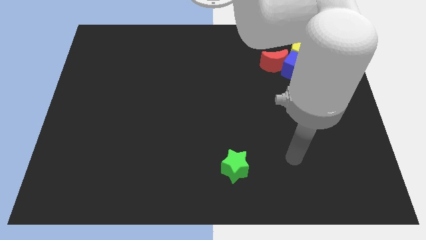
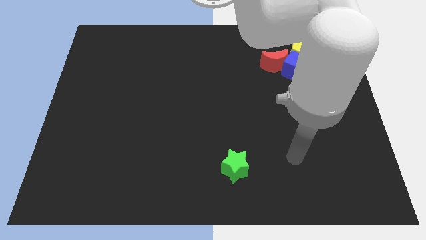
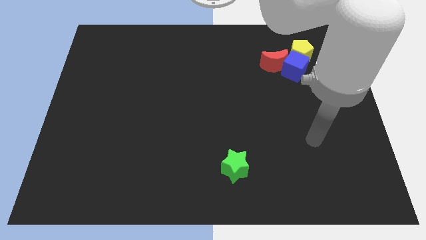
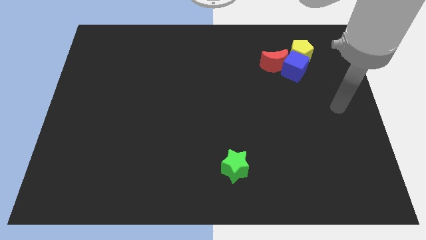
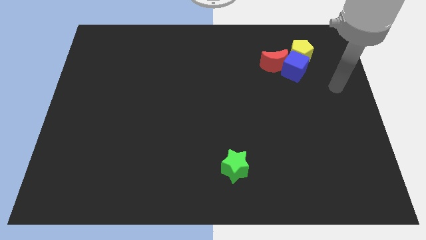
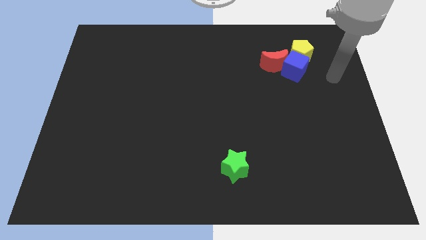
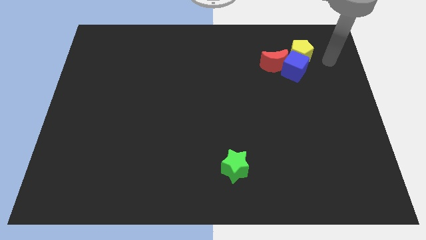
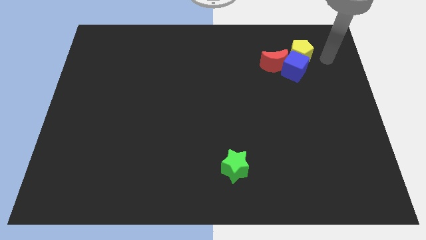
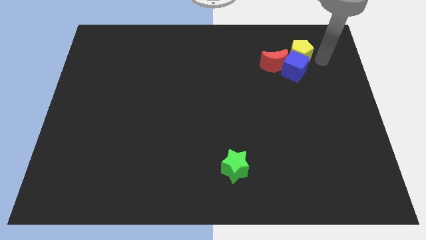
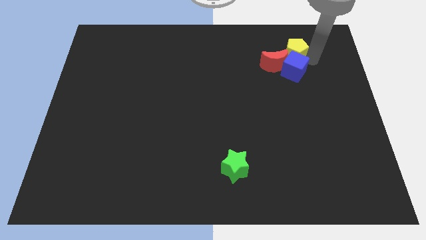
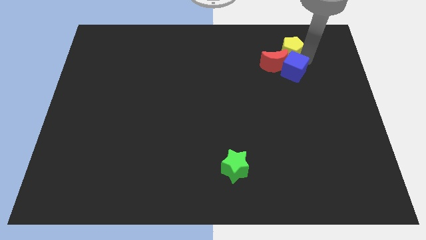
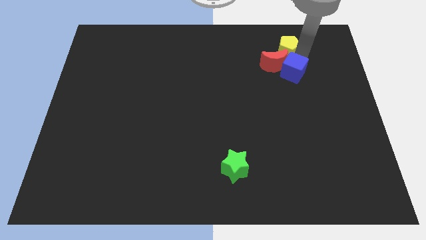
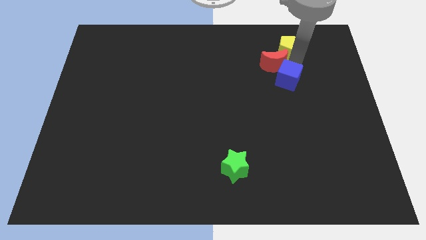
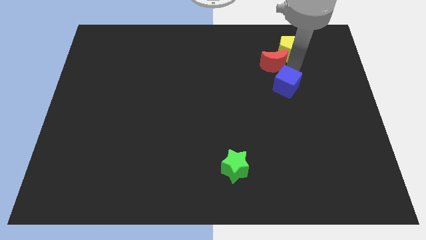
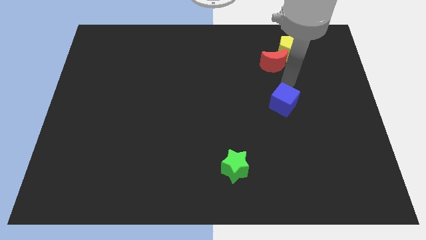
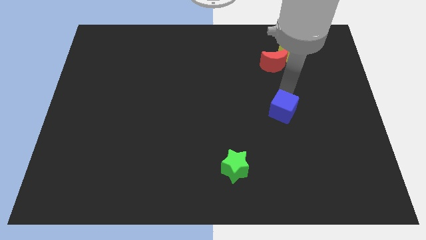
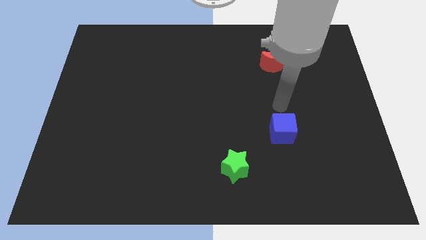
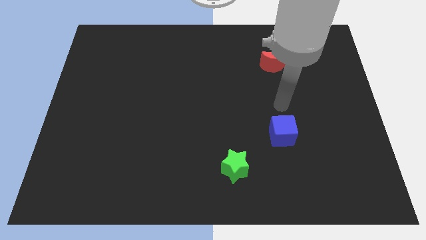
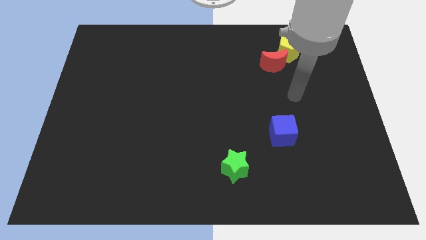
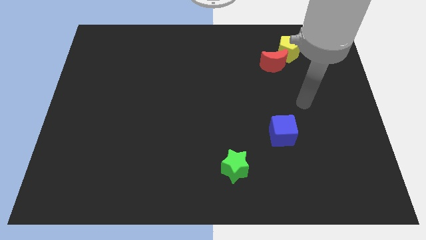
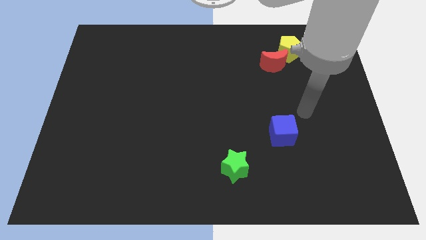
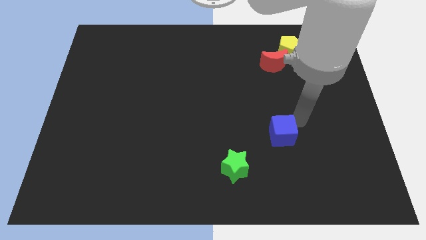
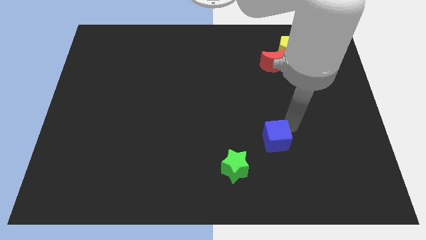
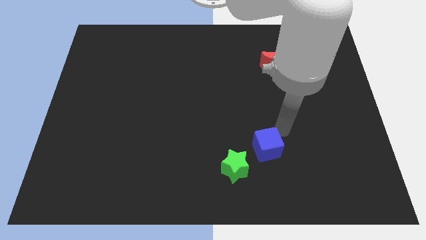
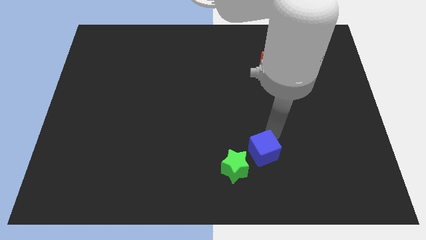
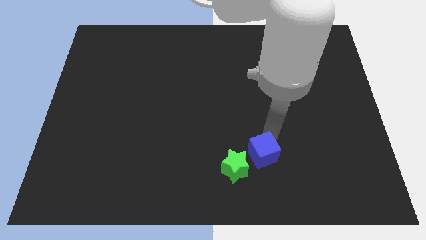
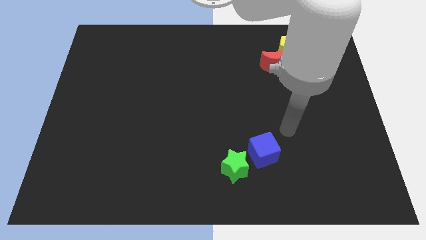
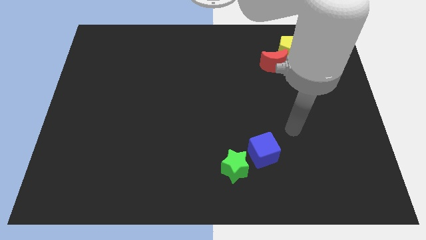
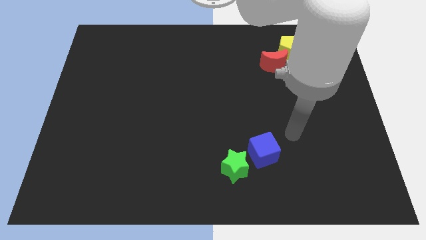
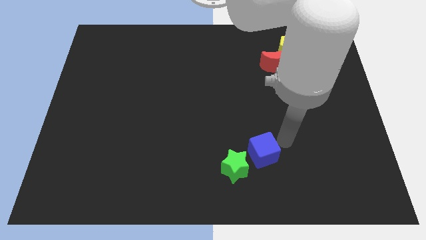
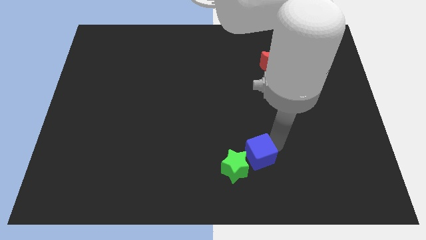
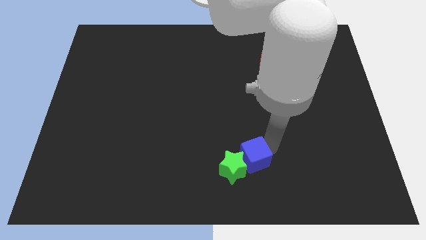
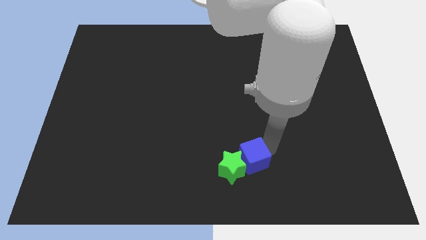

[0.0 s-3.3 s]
slide the blue cube next to the green block

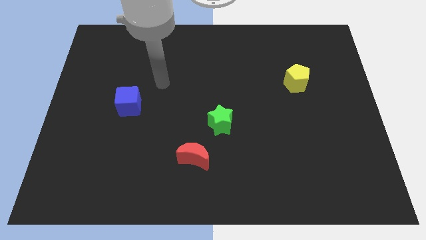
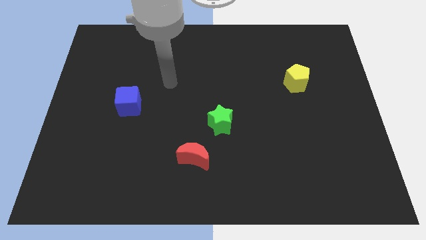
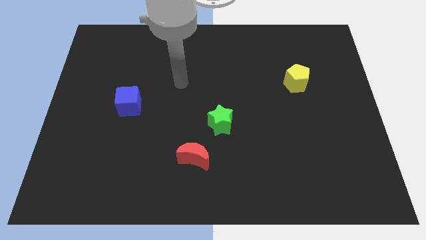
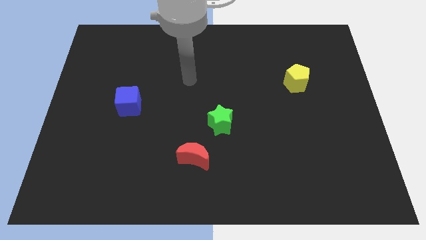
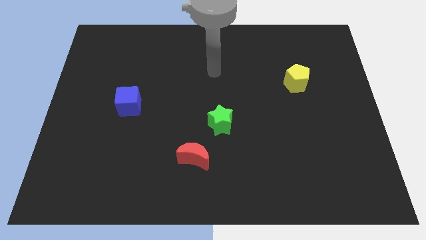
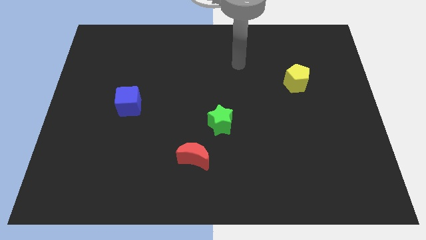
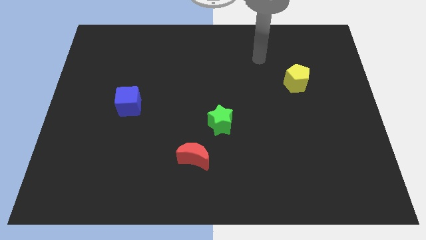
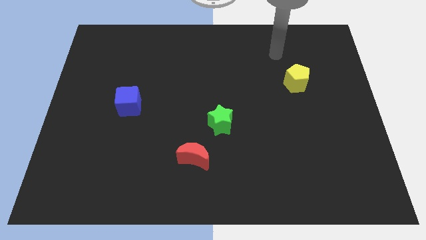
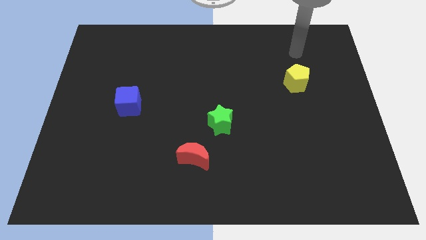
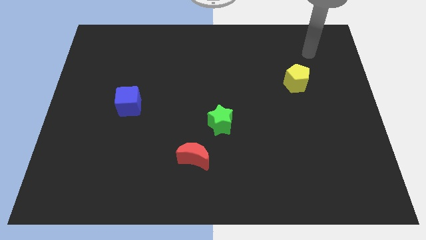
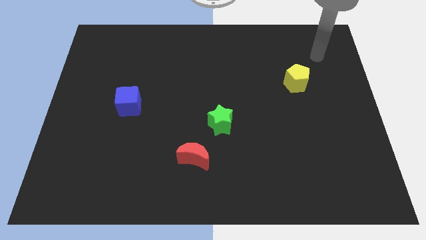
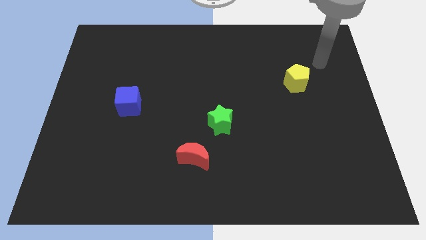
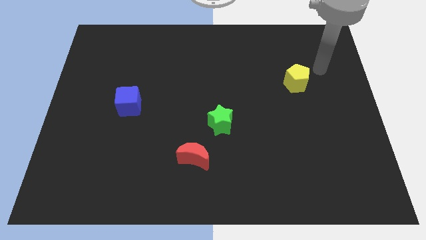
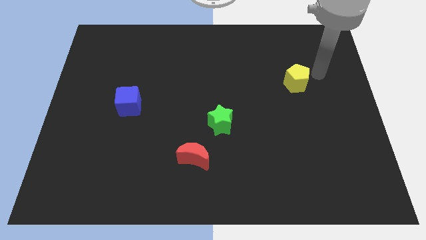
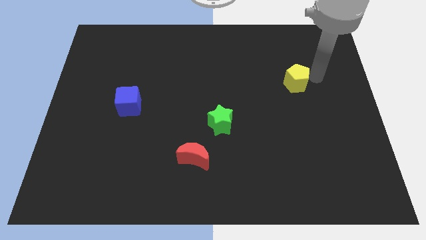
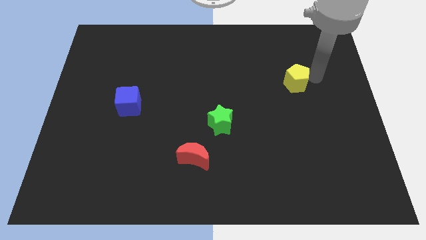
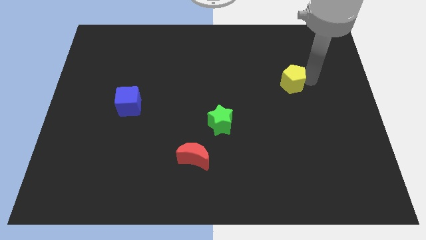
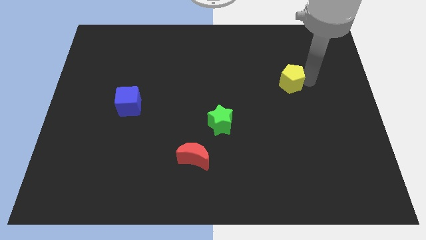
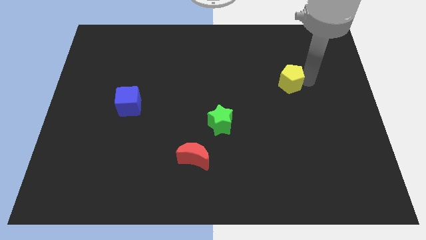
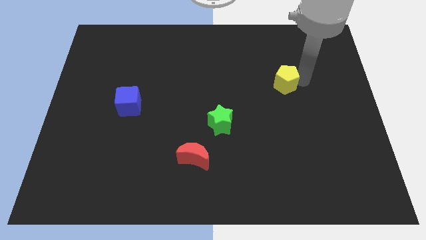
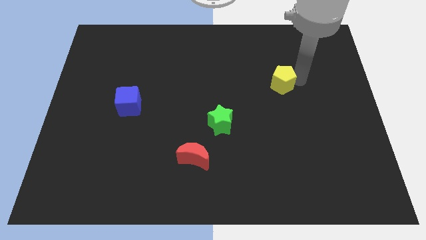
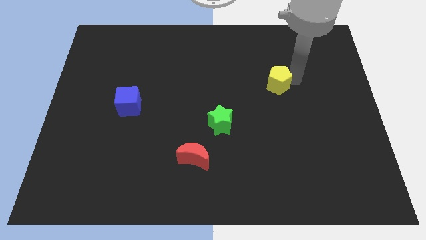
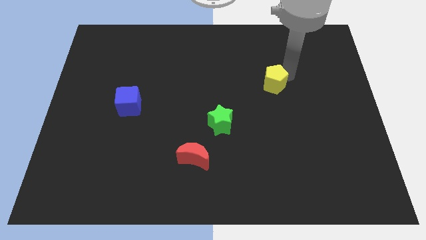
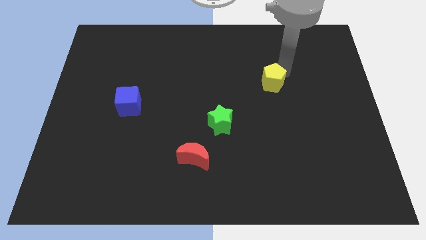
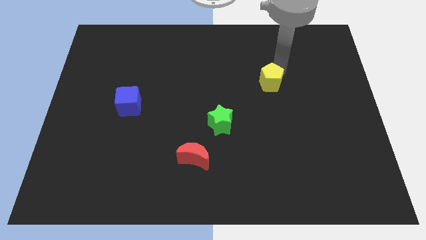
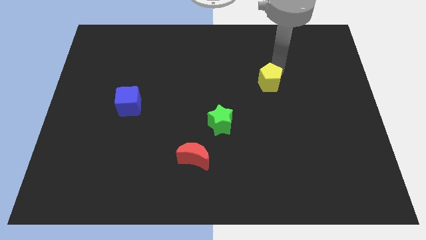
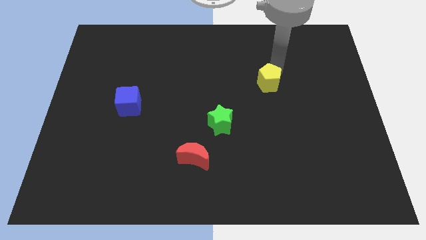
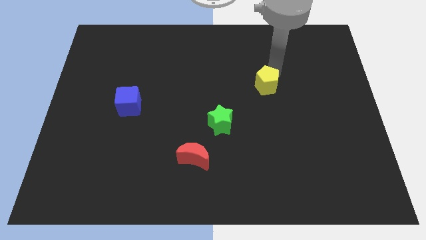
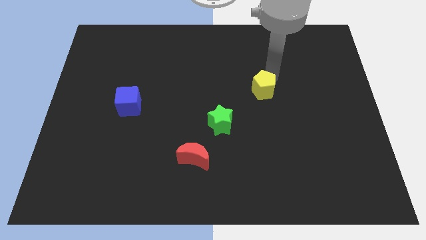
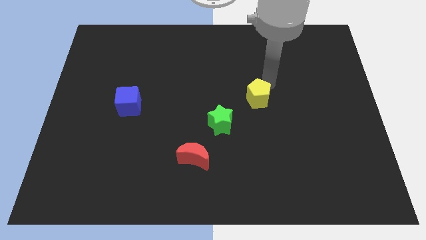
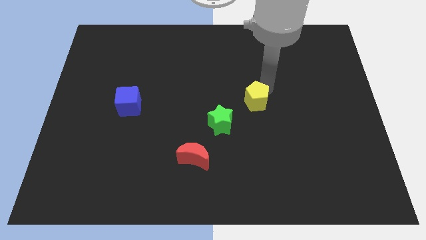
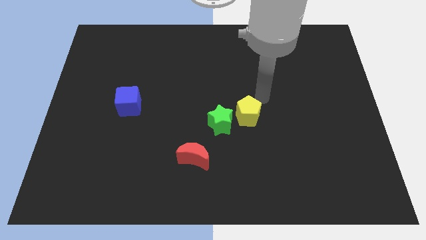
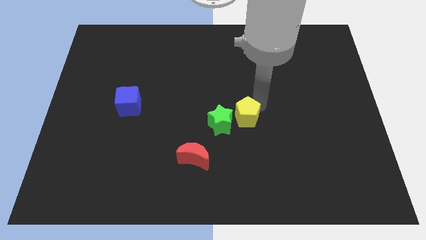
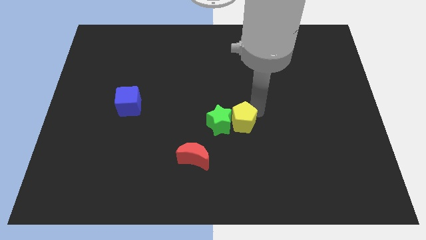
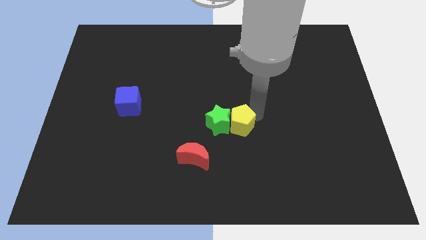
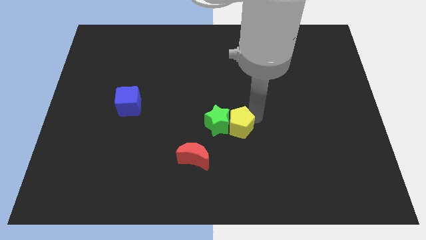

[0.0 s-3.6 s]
move the yellow block to the green star

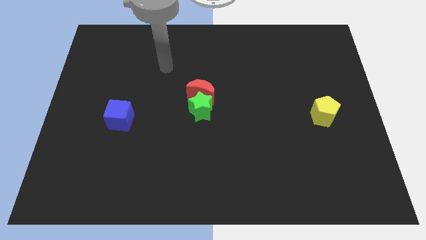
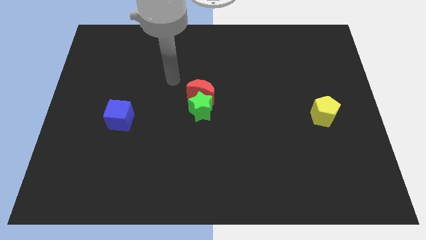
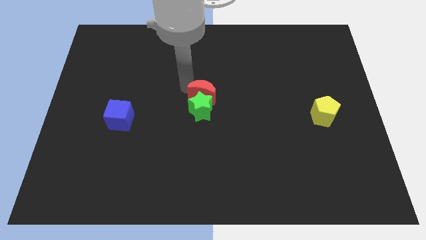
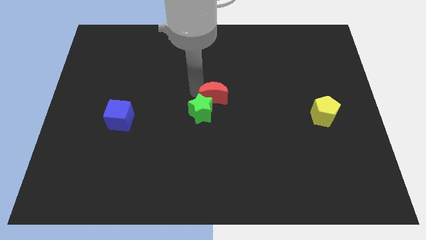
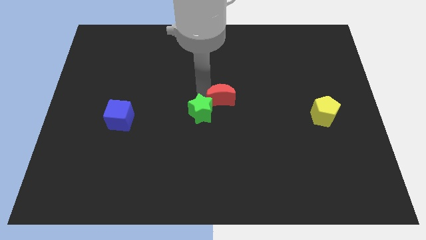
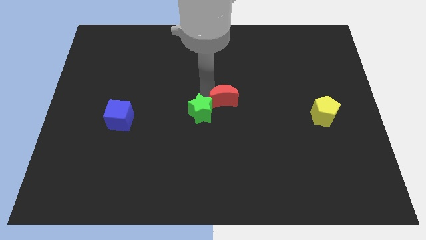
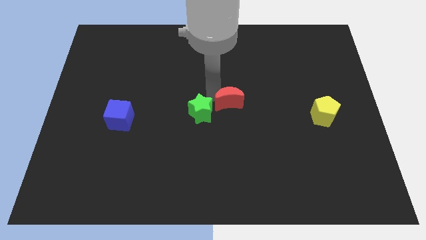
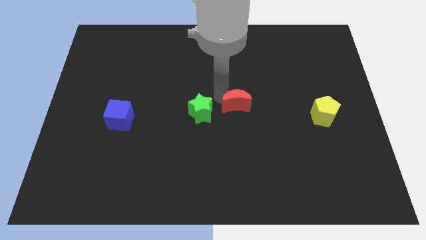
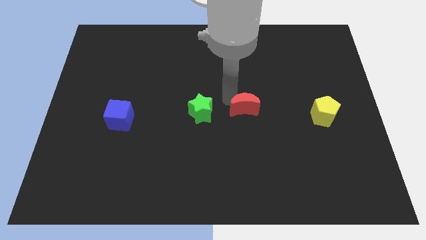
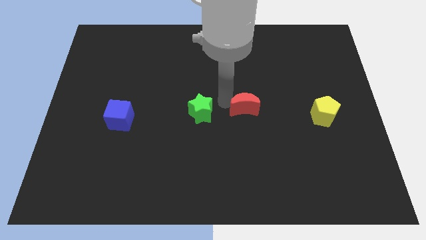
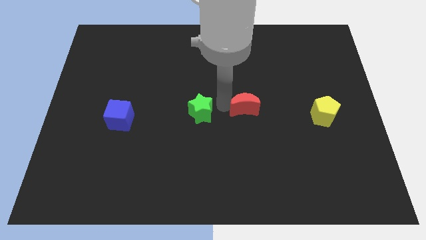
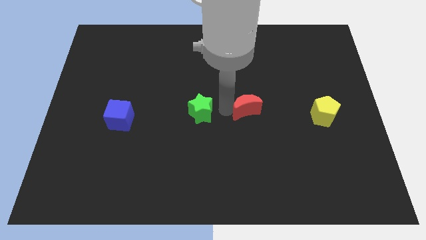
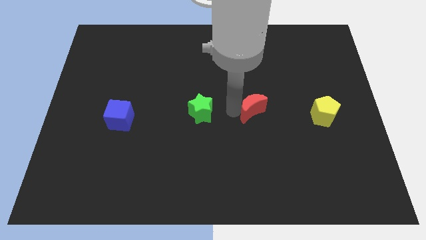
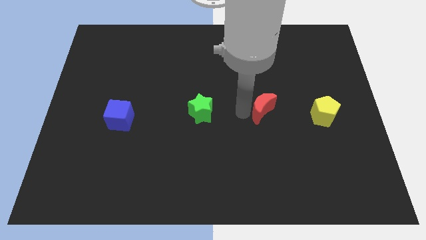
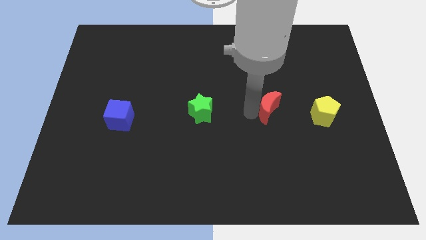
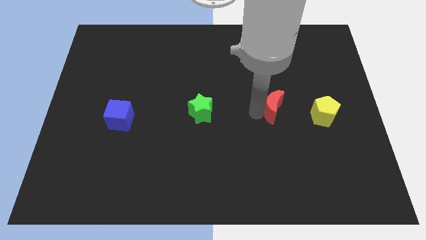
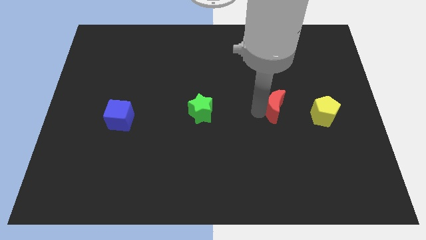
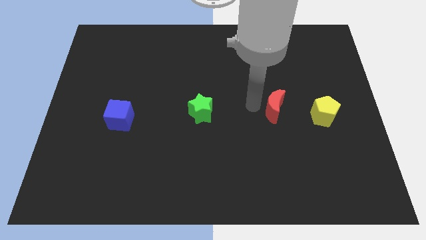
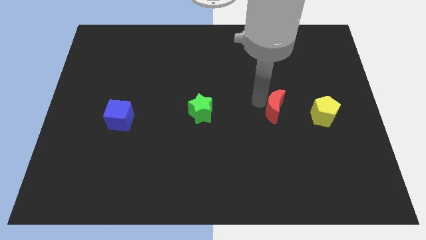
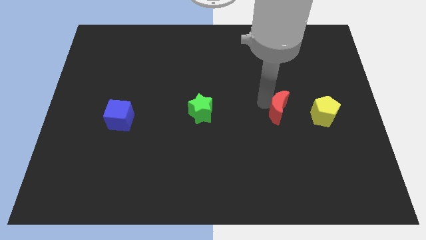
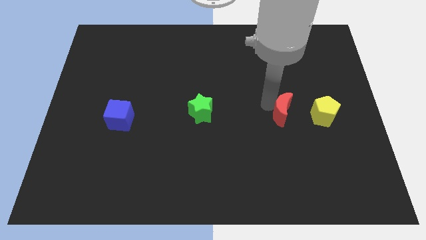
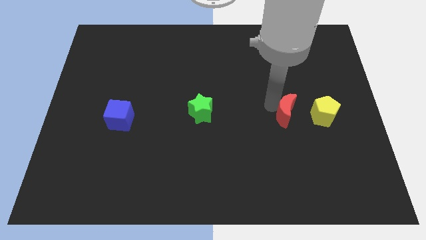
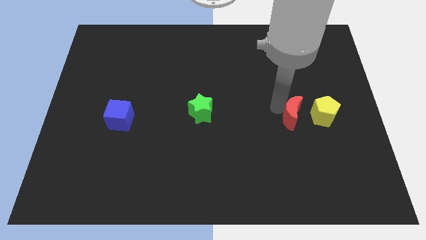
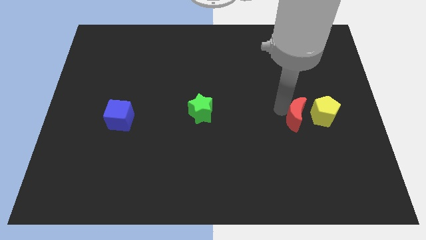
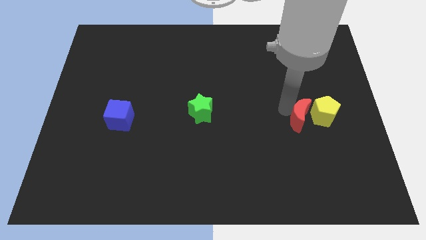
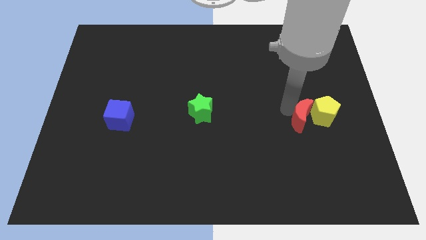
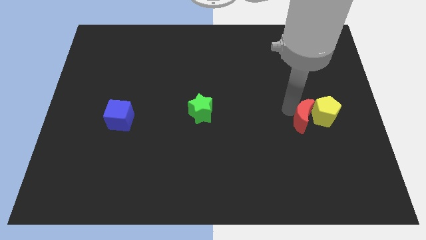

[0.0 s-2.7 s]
move the red block to the pentagon
